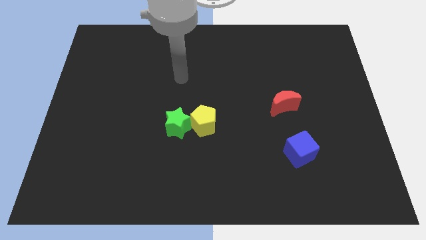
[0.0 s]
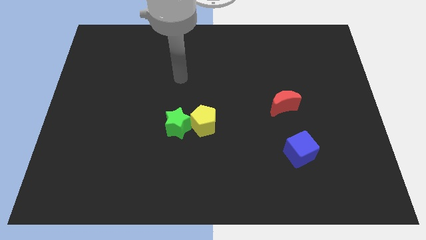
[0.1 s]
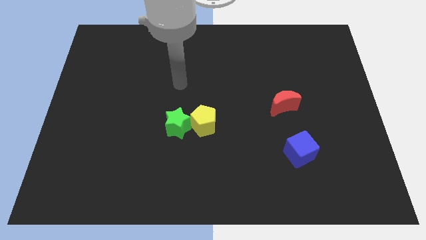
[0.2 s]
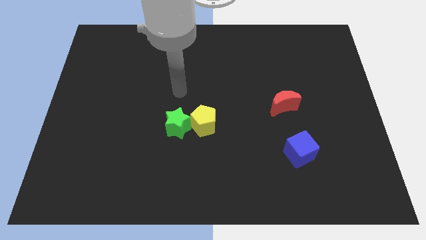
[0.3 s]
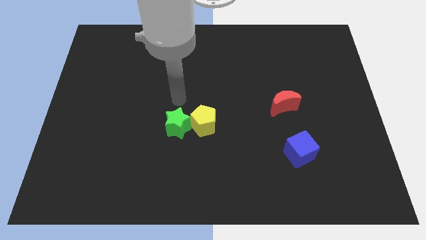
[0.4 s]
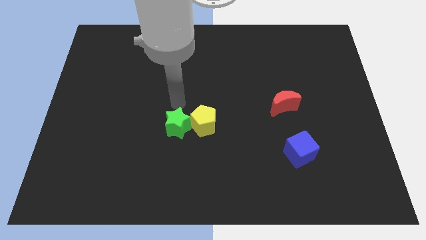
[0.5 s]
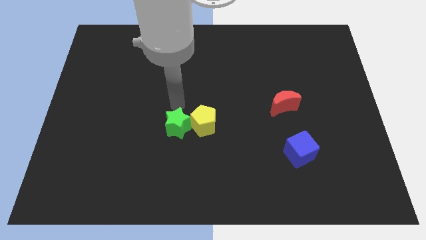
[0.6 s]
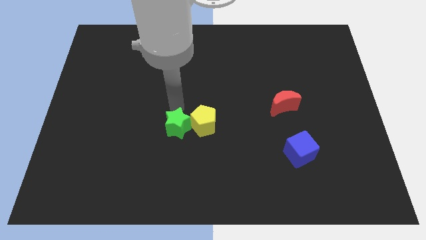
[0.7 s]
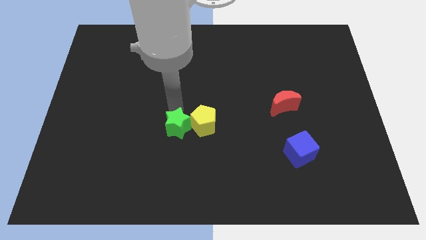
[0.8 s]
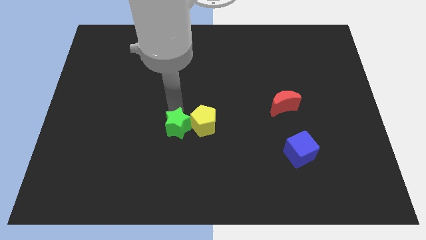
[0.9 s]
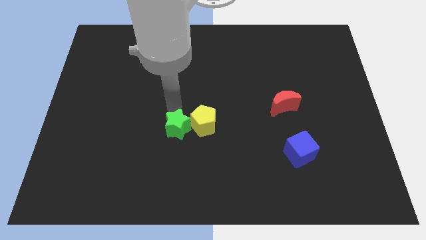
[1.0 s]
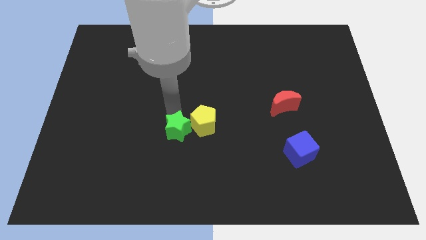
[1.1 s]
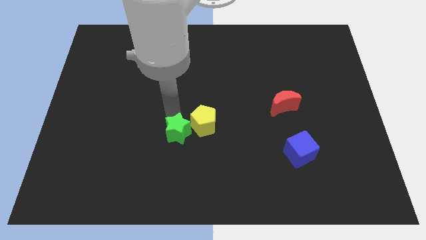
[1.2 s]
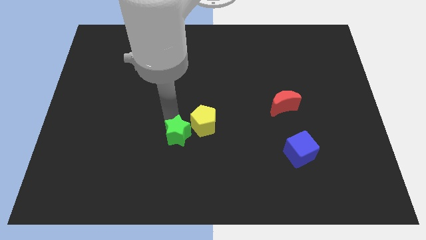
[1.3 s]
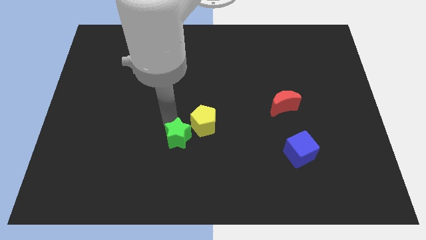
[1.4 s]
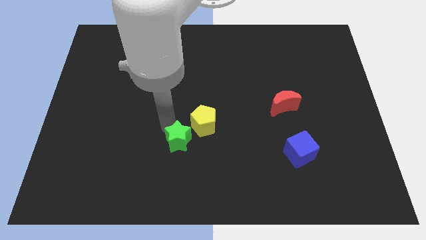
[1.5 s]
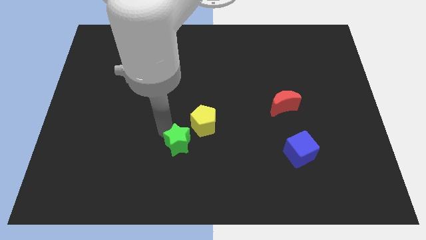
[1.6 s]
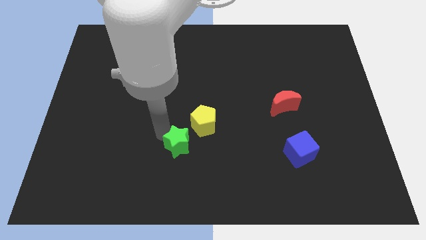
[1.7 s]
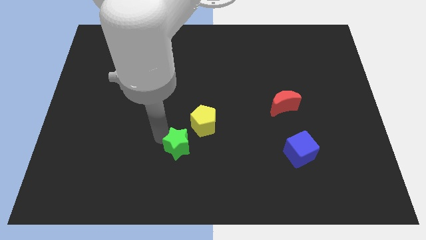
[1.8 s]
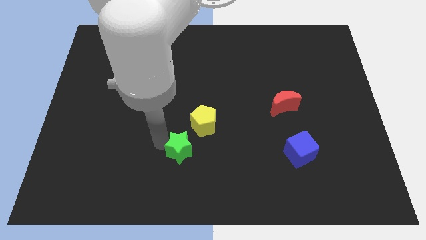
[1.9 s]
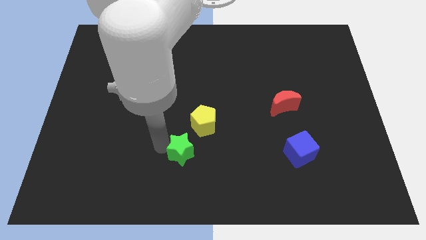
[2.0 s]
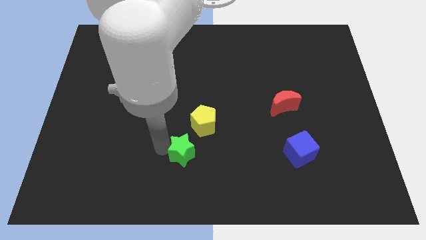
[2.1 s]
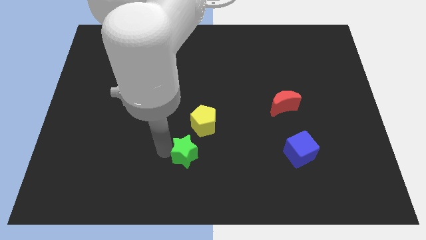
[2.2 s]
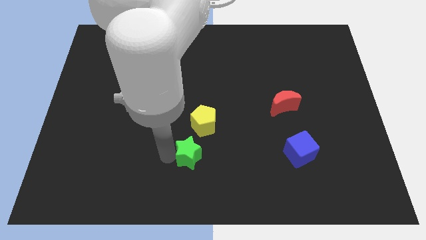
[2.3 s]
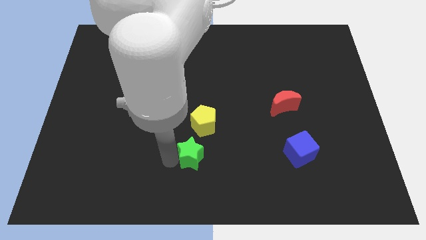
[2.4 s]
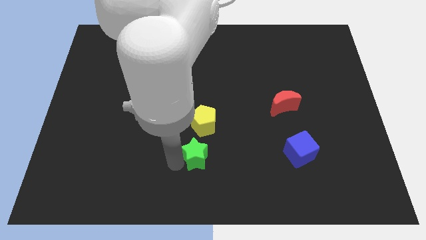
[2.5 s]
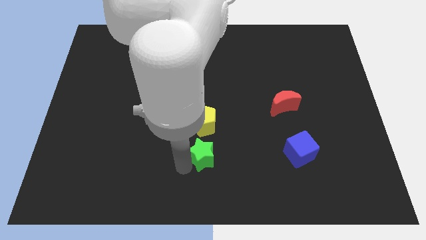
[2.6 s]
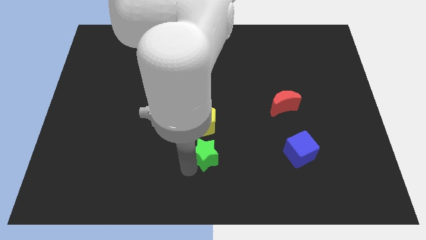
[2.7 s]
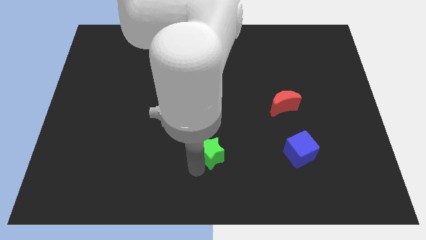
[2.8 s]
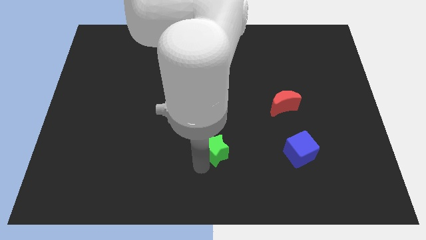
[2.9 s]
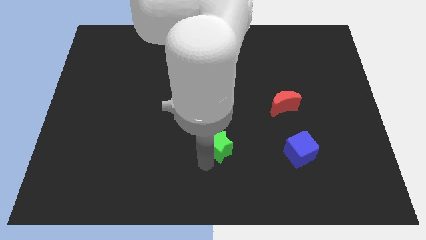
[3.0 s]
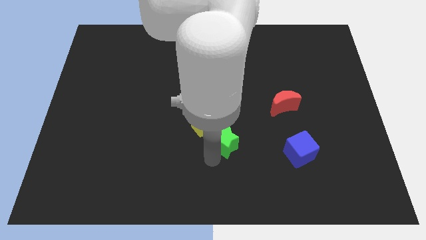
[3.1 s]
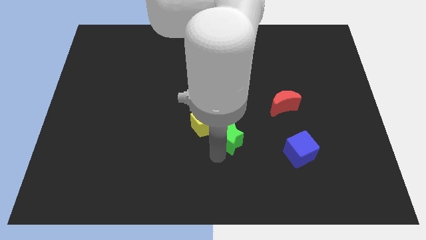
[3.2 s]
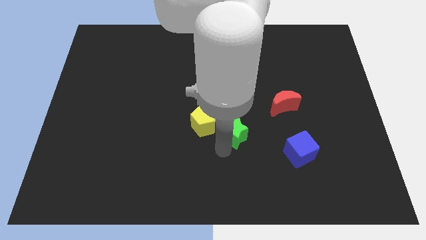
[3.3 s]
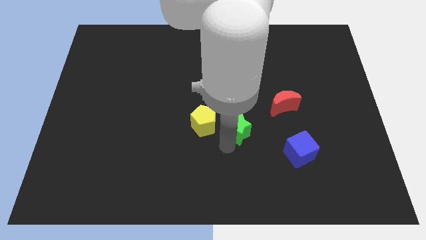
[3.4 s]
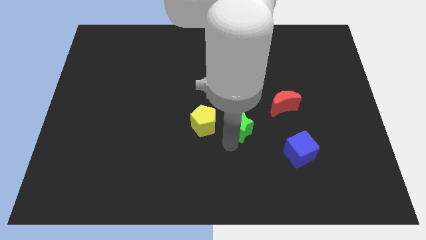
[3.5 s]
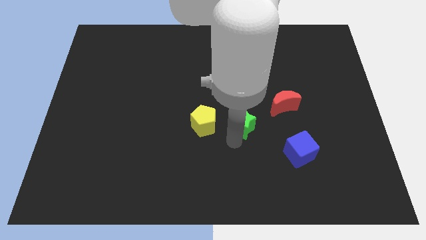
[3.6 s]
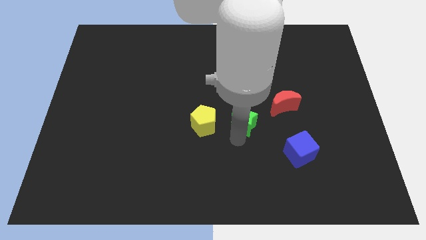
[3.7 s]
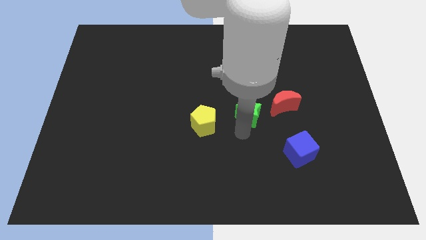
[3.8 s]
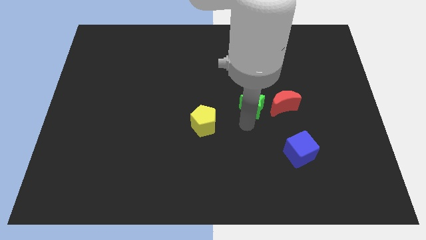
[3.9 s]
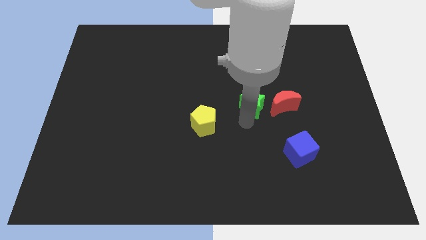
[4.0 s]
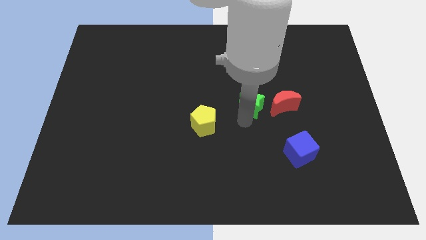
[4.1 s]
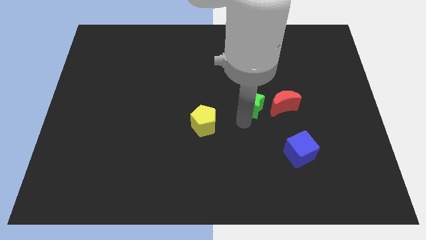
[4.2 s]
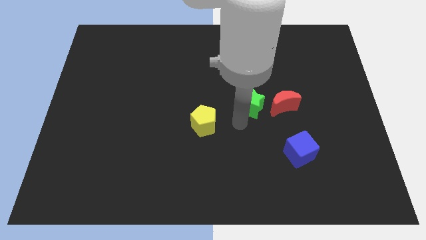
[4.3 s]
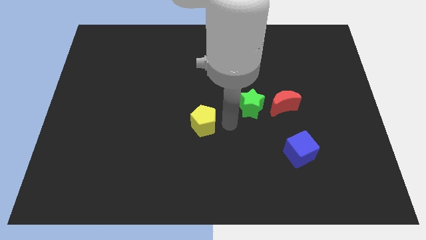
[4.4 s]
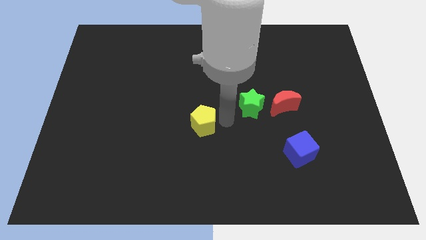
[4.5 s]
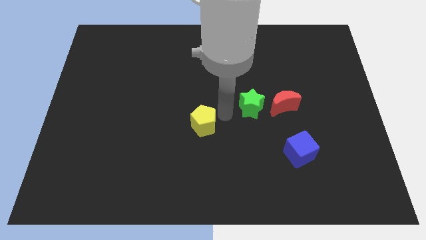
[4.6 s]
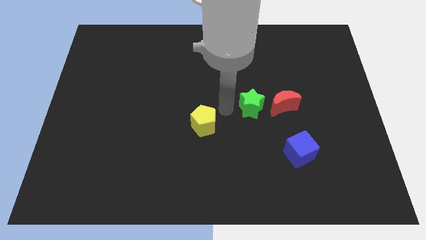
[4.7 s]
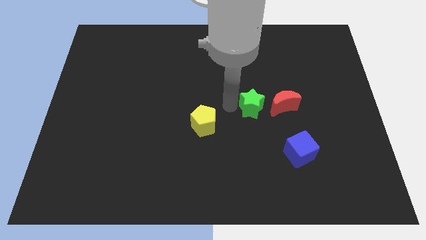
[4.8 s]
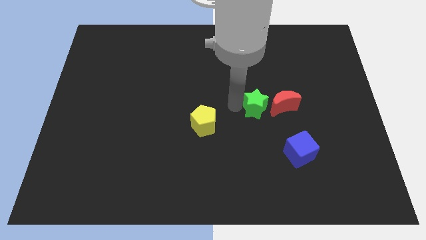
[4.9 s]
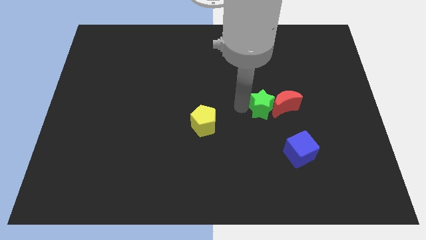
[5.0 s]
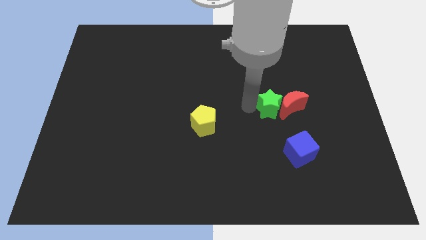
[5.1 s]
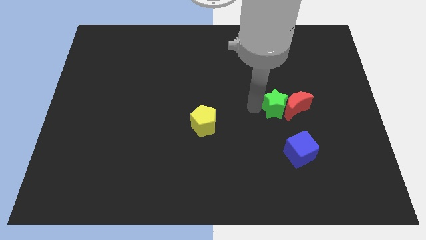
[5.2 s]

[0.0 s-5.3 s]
push the green block next to the red block

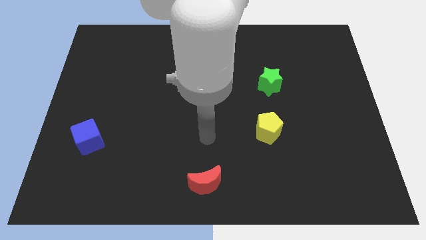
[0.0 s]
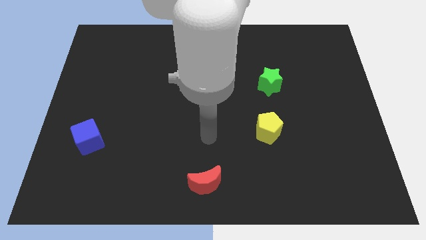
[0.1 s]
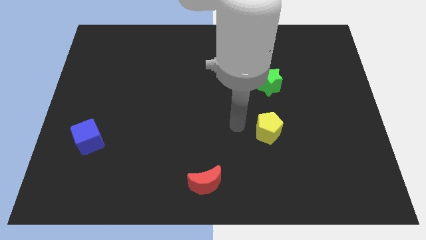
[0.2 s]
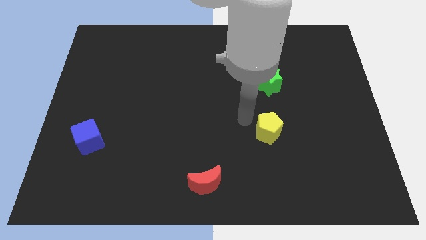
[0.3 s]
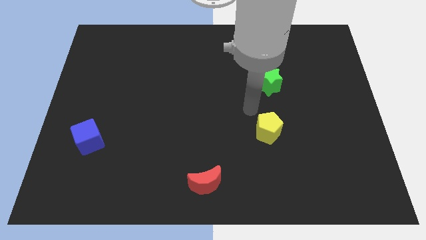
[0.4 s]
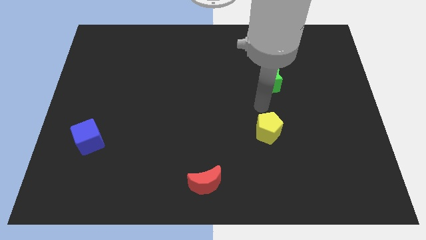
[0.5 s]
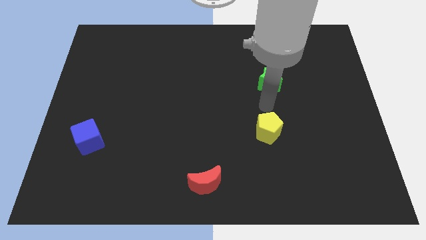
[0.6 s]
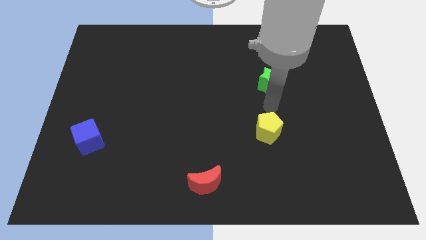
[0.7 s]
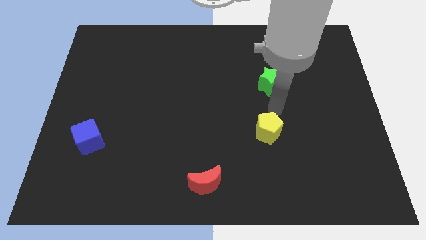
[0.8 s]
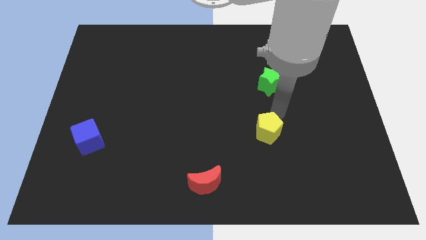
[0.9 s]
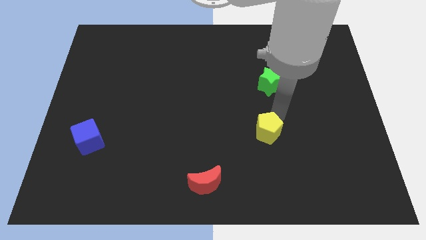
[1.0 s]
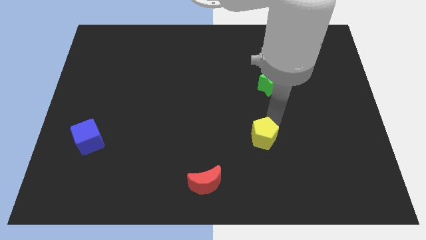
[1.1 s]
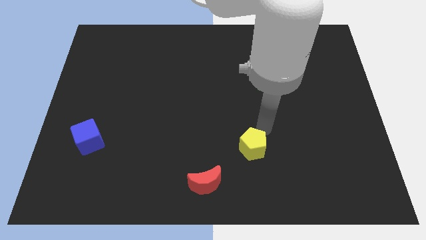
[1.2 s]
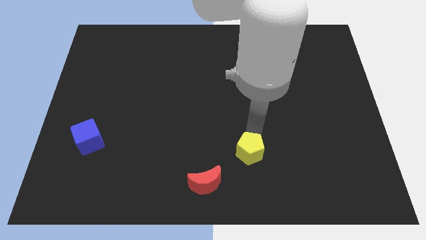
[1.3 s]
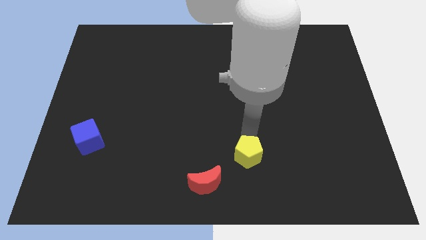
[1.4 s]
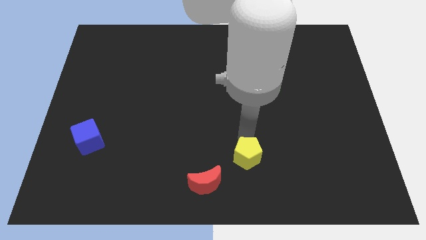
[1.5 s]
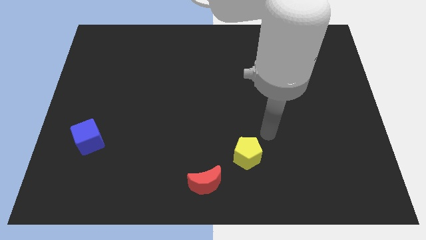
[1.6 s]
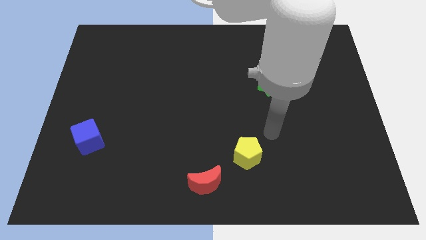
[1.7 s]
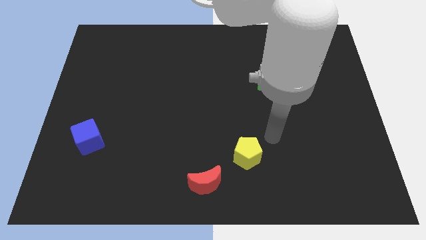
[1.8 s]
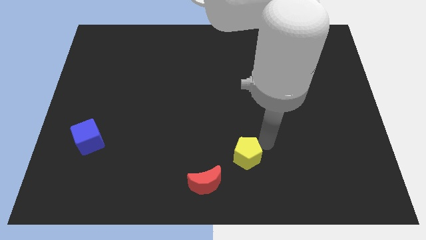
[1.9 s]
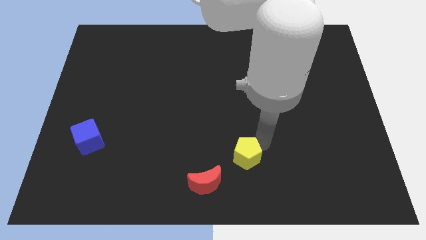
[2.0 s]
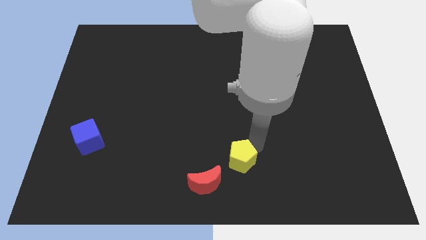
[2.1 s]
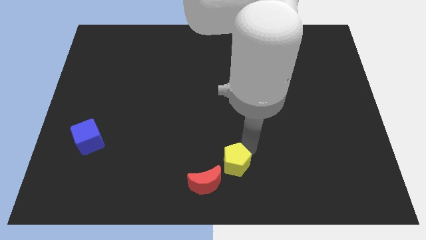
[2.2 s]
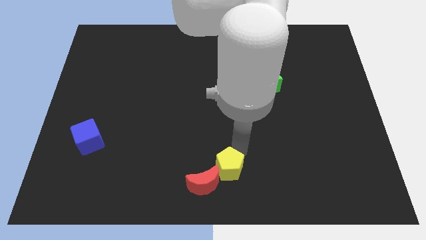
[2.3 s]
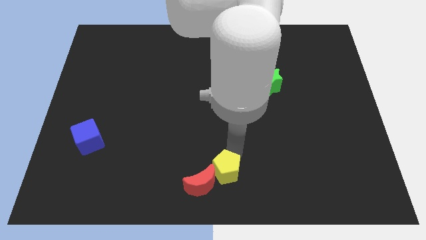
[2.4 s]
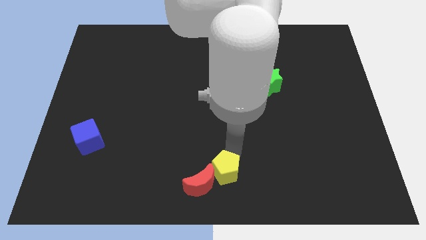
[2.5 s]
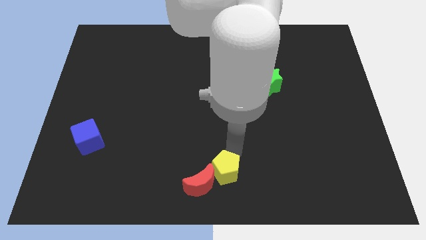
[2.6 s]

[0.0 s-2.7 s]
move the yellow block next to the red block

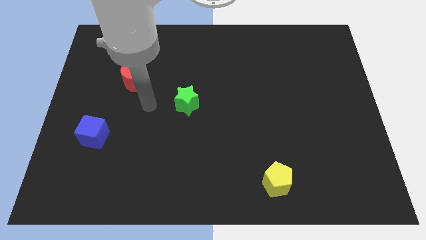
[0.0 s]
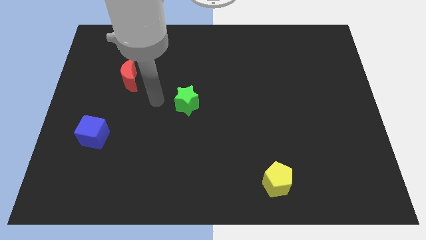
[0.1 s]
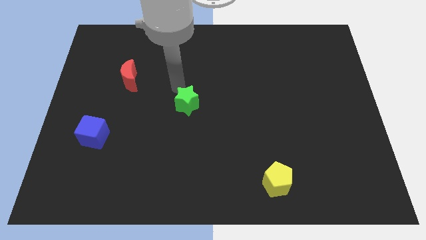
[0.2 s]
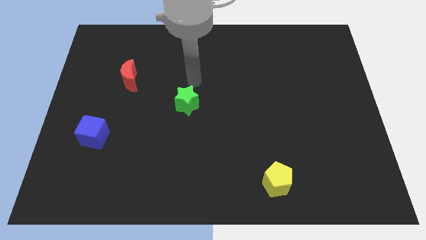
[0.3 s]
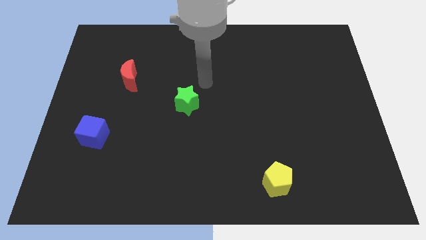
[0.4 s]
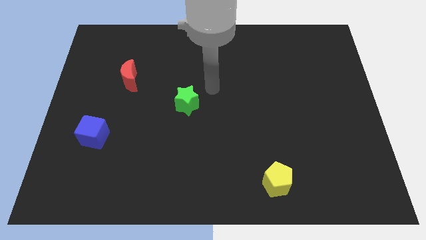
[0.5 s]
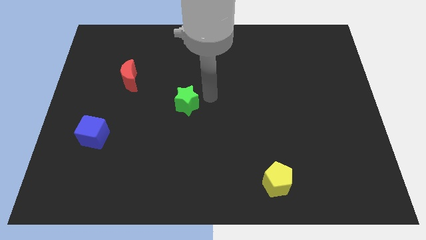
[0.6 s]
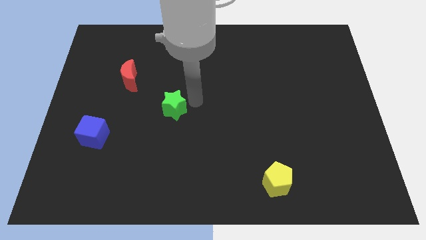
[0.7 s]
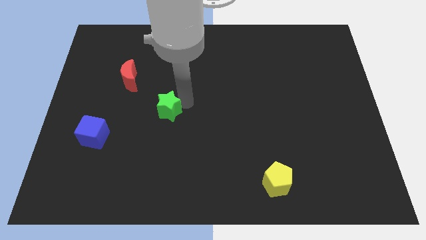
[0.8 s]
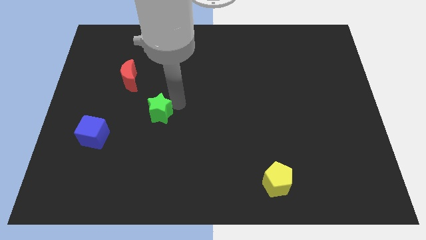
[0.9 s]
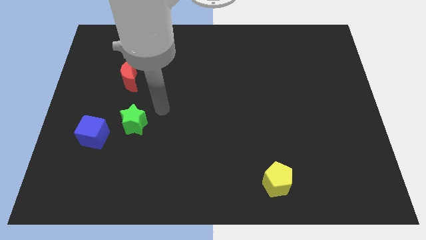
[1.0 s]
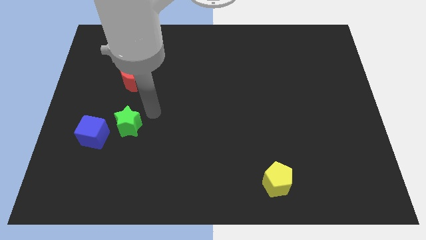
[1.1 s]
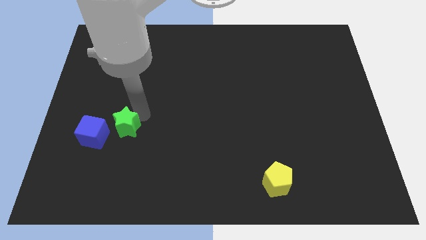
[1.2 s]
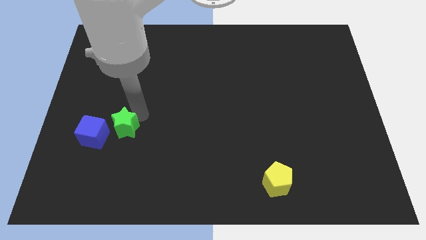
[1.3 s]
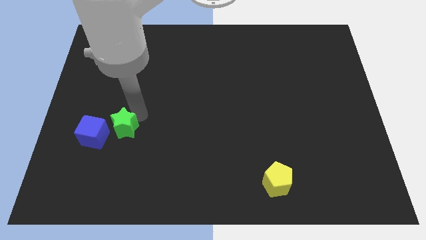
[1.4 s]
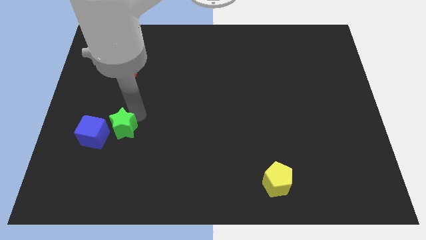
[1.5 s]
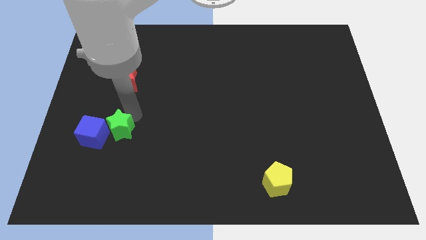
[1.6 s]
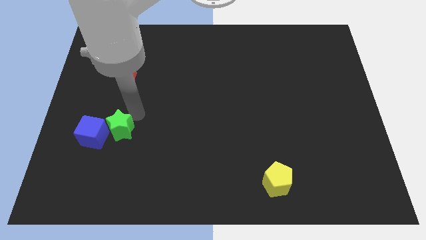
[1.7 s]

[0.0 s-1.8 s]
slide the green star next to the blue cube
